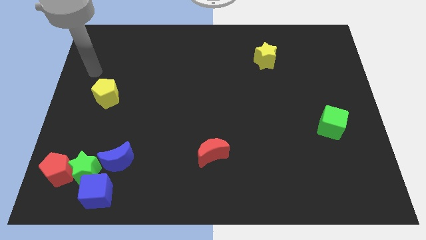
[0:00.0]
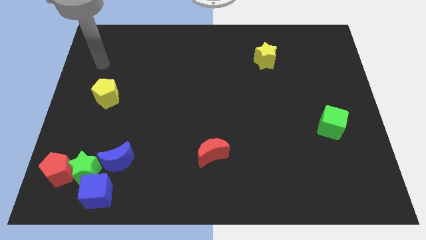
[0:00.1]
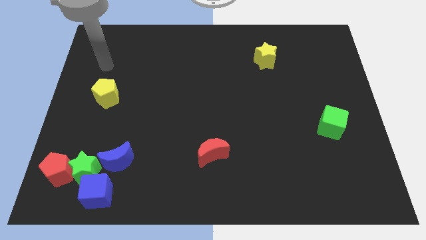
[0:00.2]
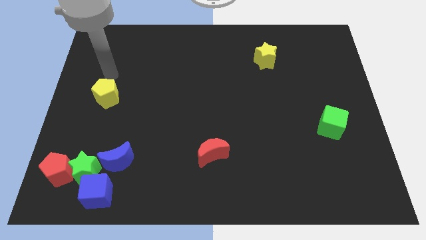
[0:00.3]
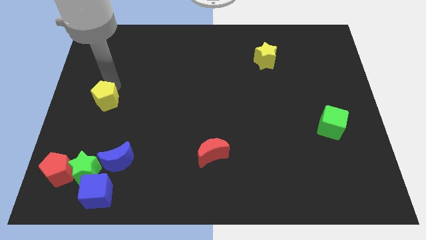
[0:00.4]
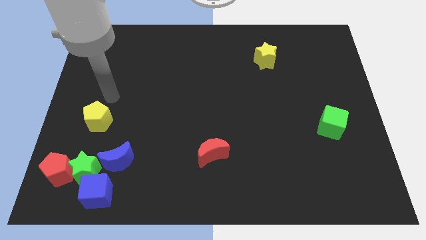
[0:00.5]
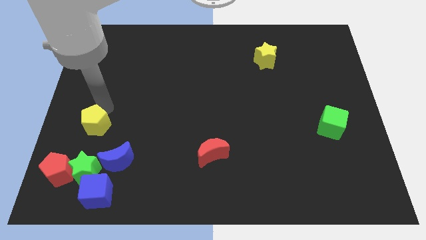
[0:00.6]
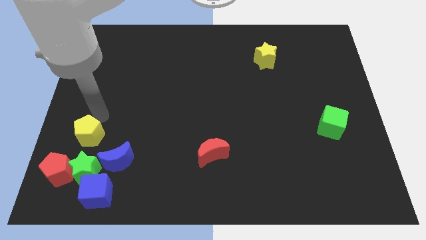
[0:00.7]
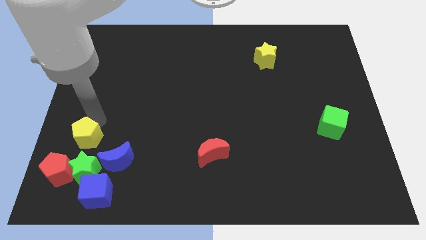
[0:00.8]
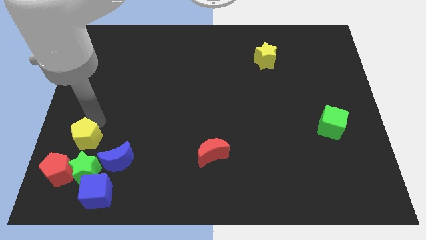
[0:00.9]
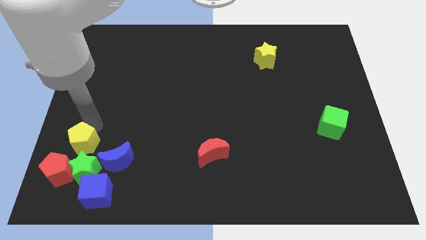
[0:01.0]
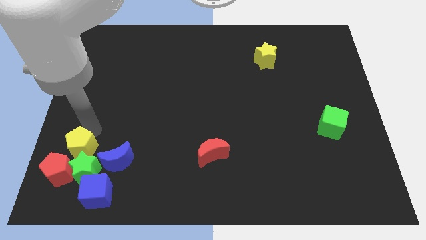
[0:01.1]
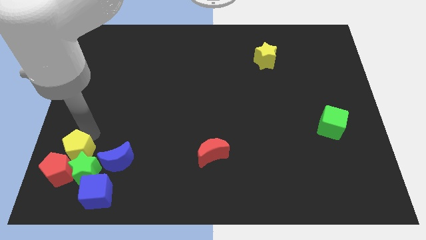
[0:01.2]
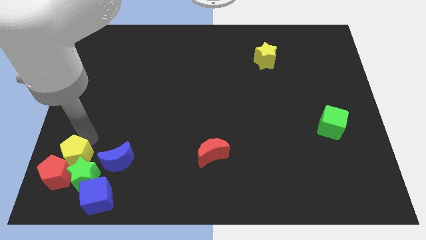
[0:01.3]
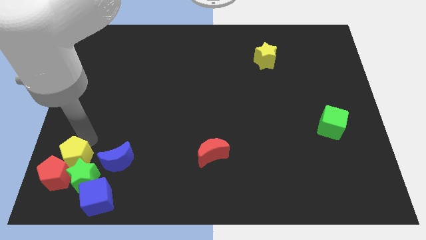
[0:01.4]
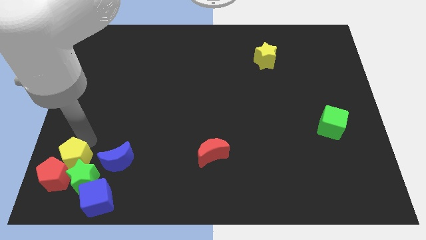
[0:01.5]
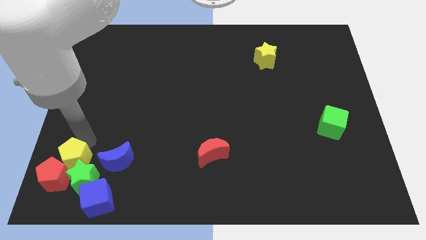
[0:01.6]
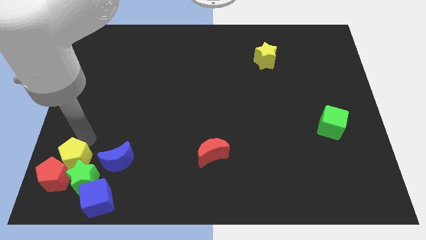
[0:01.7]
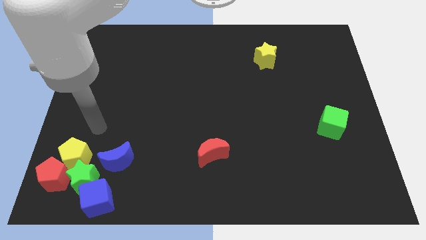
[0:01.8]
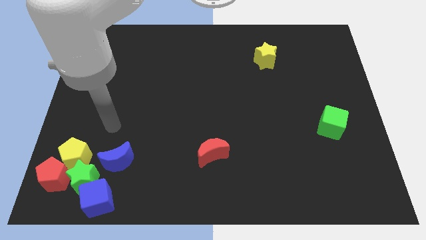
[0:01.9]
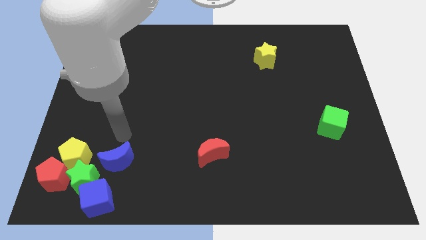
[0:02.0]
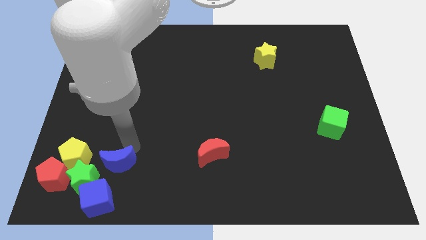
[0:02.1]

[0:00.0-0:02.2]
place yellow pentagon into green star and red pentagon

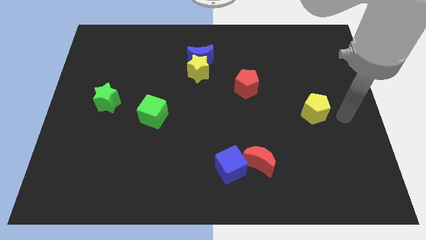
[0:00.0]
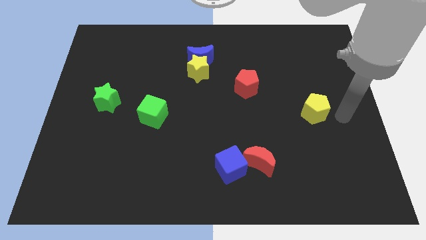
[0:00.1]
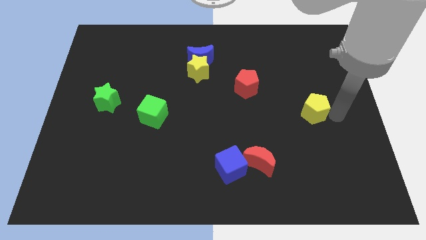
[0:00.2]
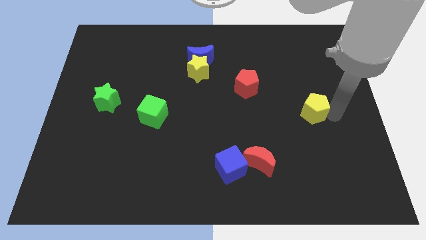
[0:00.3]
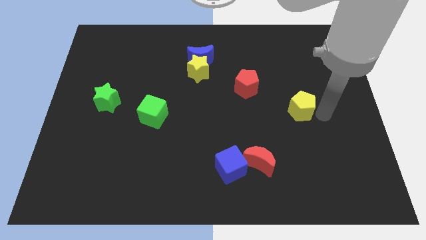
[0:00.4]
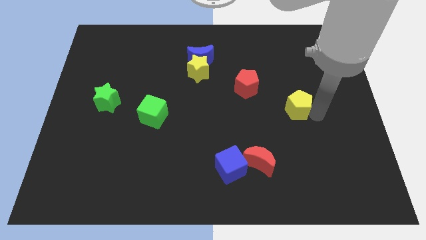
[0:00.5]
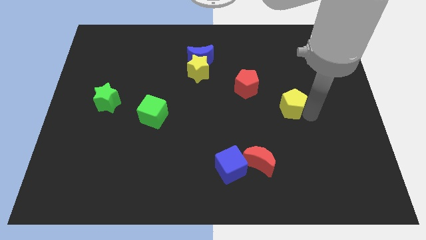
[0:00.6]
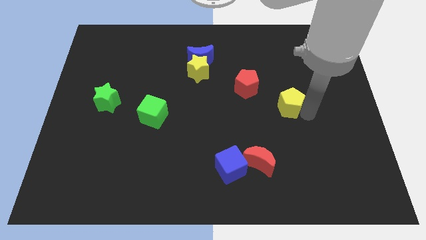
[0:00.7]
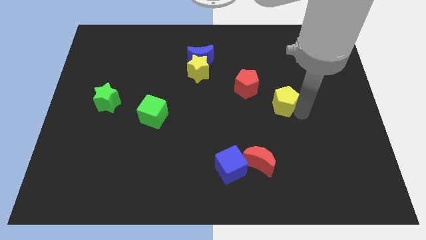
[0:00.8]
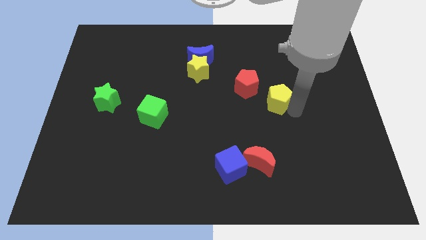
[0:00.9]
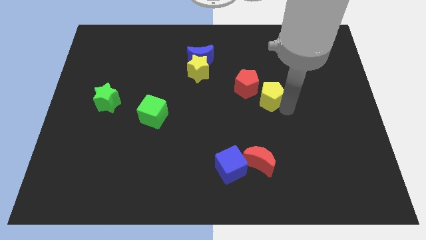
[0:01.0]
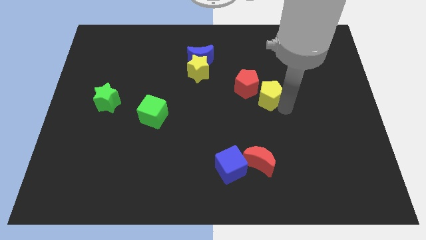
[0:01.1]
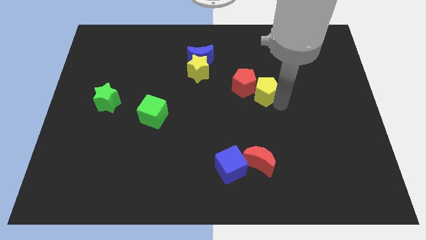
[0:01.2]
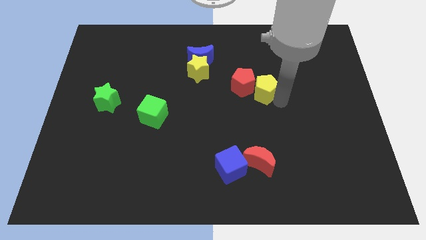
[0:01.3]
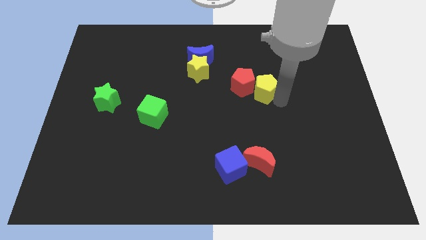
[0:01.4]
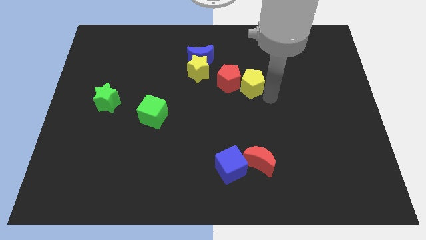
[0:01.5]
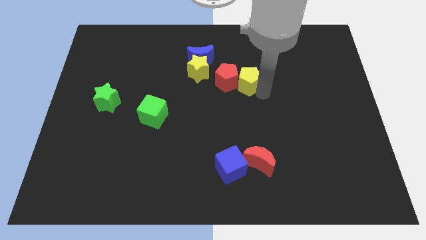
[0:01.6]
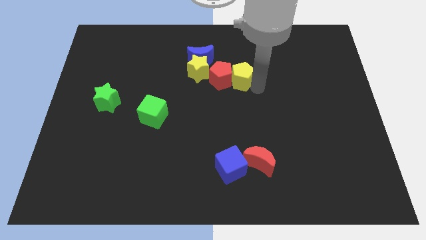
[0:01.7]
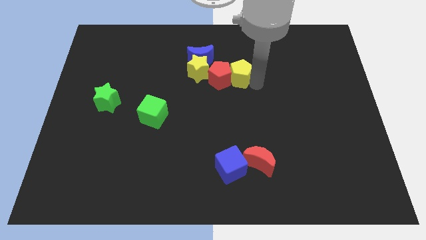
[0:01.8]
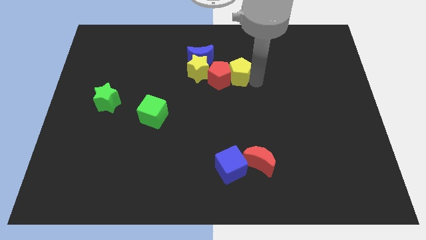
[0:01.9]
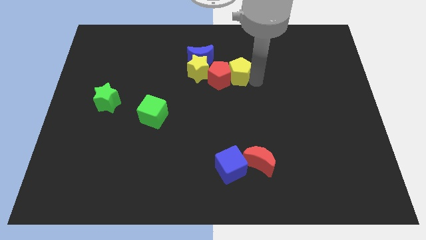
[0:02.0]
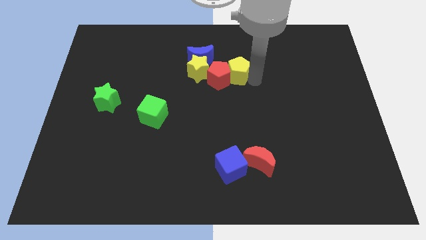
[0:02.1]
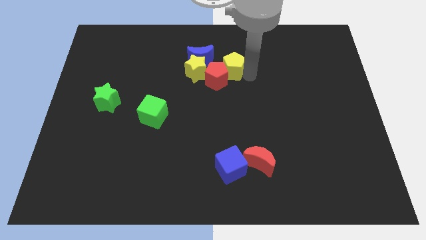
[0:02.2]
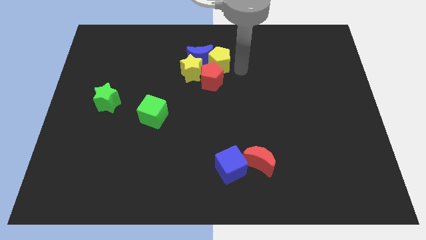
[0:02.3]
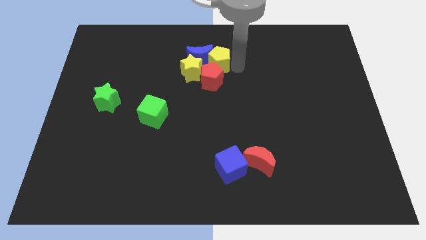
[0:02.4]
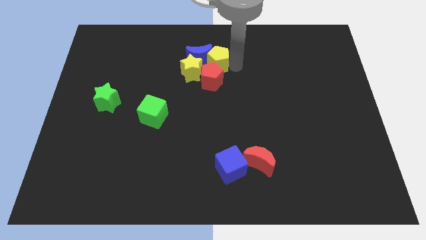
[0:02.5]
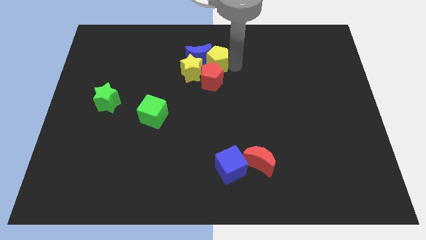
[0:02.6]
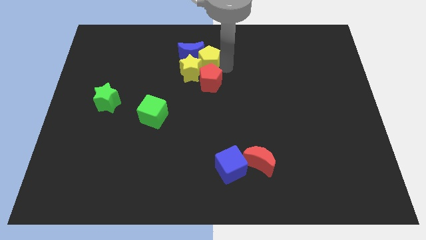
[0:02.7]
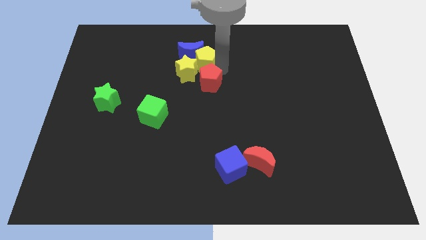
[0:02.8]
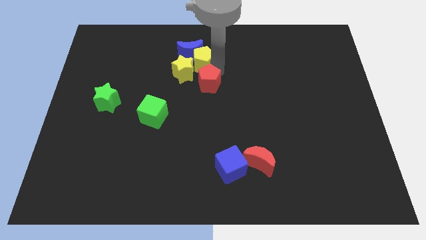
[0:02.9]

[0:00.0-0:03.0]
push yellow pentagon into group of blocks

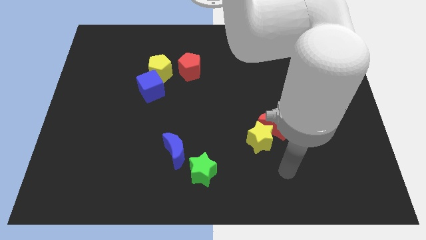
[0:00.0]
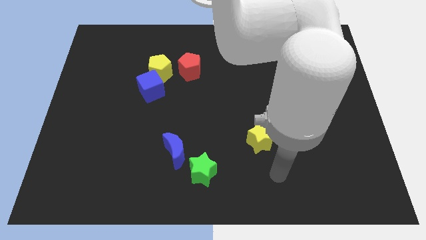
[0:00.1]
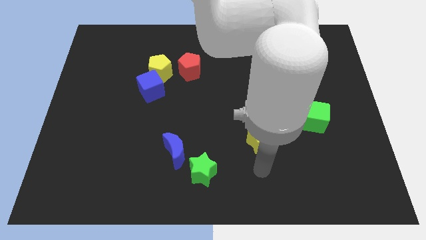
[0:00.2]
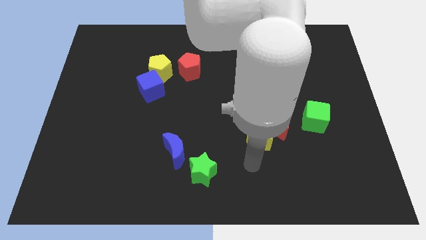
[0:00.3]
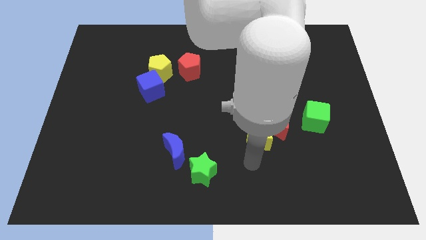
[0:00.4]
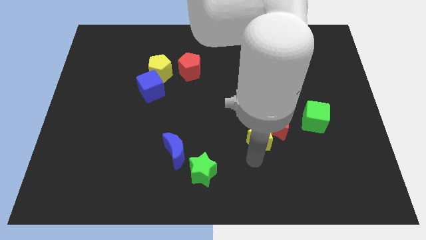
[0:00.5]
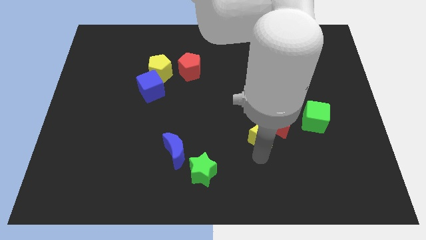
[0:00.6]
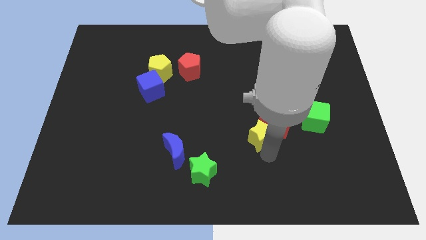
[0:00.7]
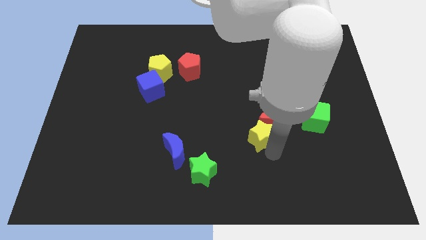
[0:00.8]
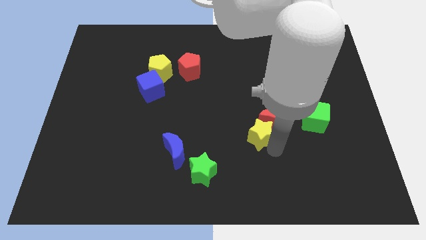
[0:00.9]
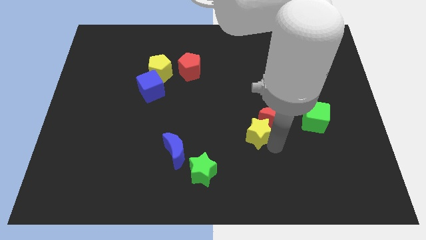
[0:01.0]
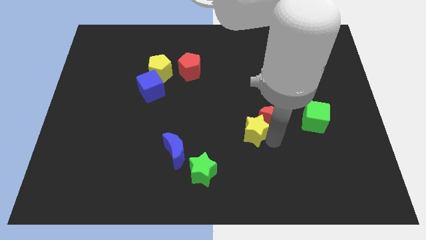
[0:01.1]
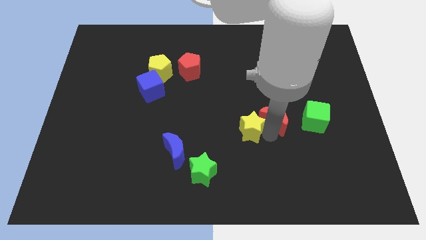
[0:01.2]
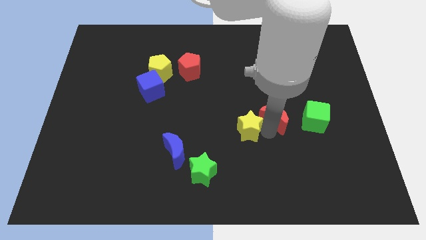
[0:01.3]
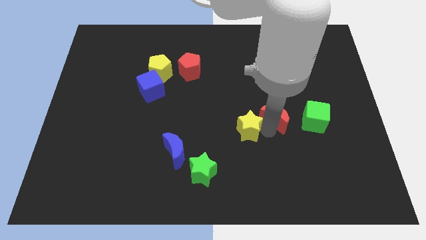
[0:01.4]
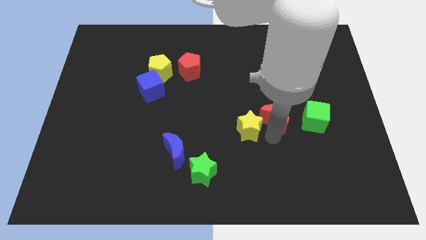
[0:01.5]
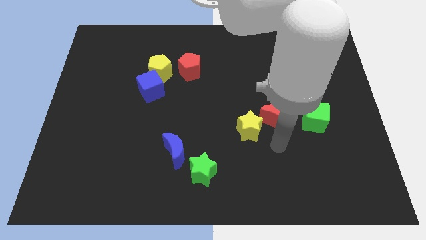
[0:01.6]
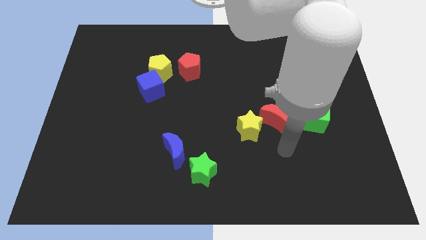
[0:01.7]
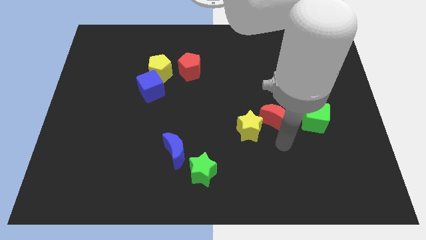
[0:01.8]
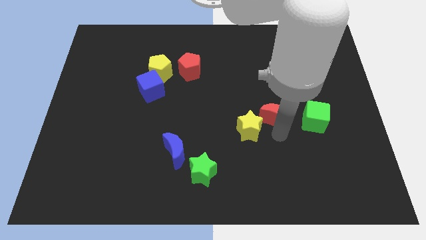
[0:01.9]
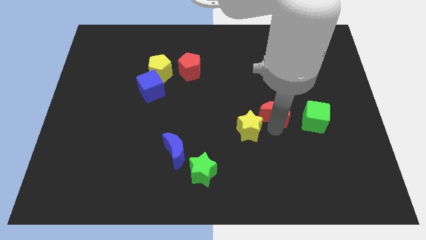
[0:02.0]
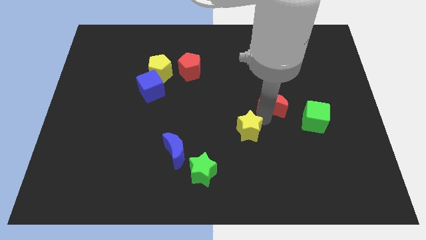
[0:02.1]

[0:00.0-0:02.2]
place the red crescent away from the yellow star

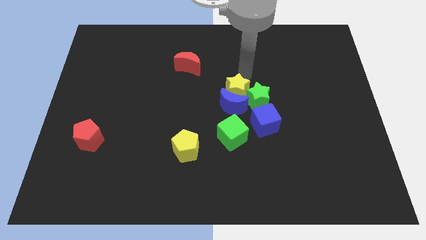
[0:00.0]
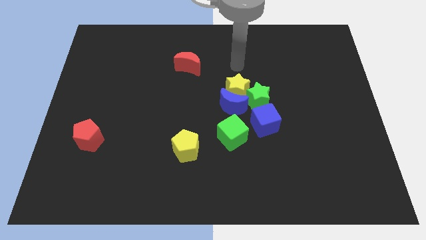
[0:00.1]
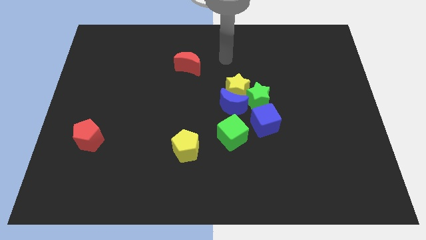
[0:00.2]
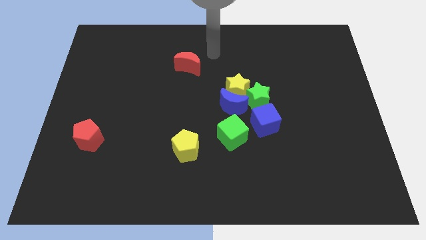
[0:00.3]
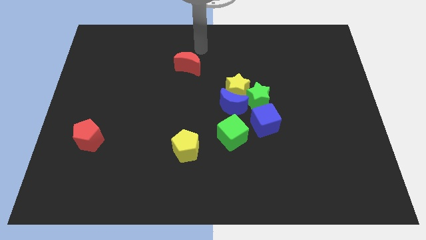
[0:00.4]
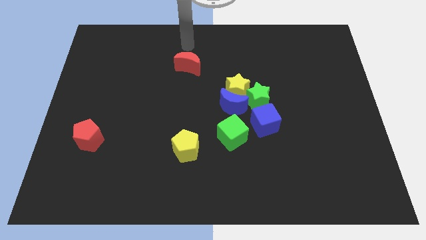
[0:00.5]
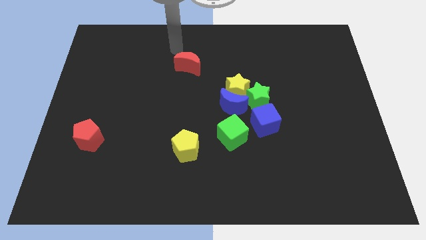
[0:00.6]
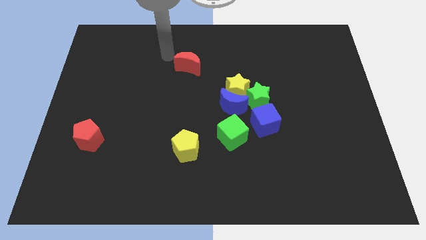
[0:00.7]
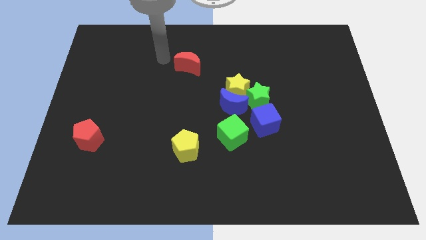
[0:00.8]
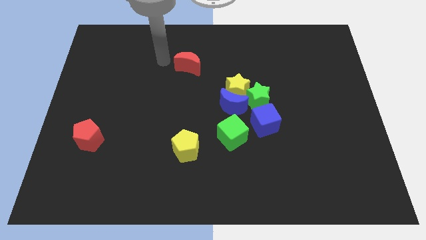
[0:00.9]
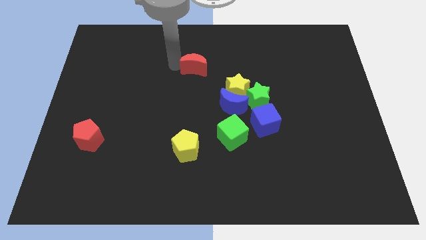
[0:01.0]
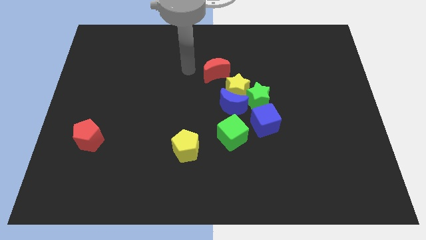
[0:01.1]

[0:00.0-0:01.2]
move your arm into the red crescent

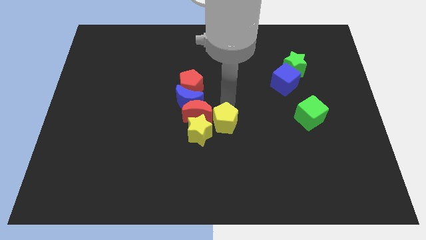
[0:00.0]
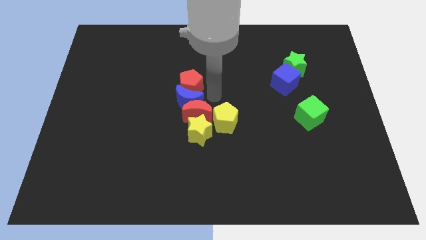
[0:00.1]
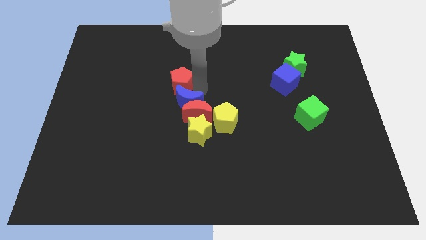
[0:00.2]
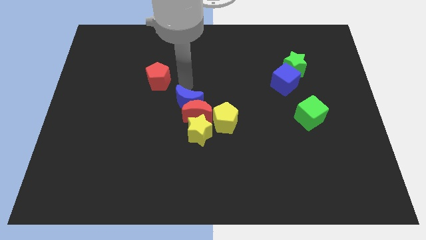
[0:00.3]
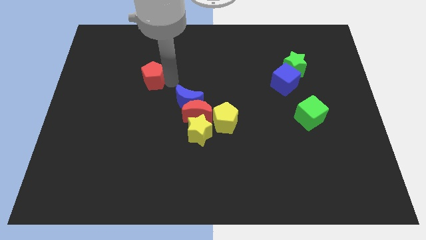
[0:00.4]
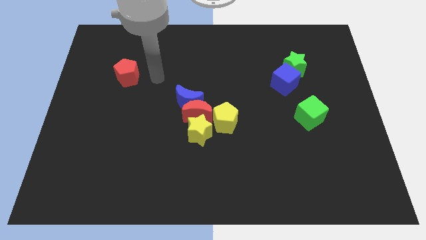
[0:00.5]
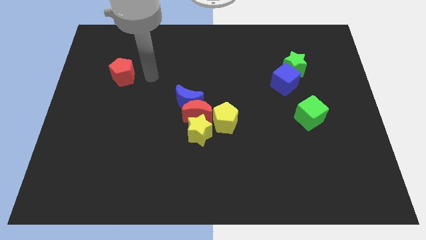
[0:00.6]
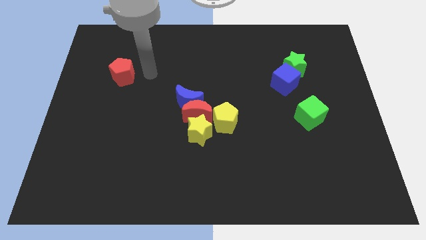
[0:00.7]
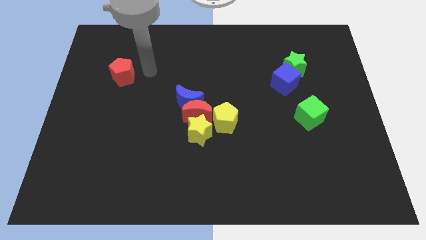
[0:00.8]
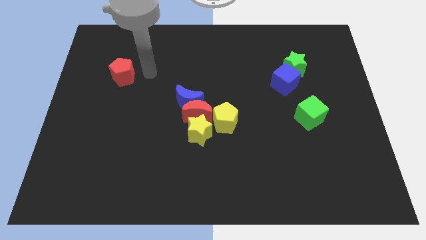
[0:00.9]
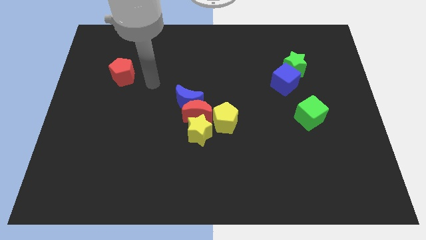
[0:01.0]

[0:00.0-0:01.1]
separate the red pentagon from the blue moon
